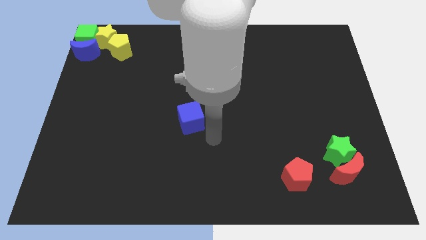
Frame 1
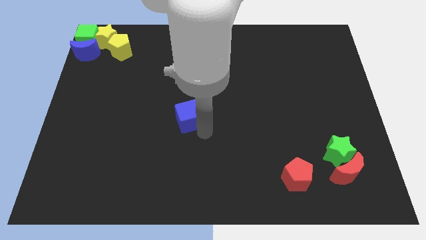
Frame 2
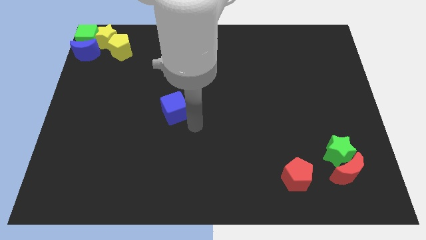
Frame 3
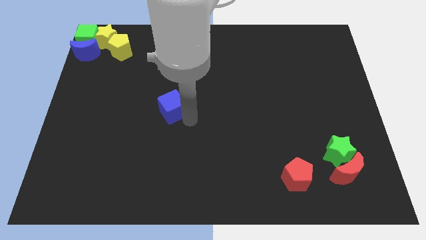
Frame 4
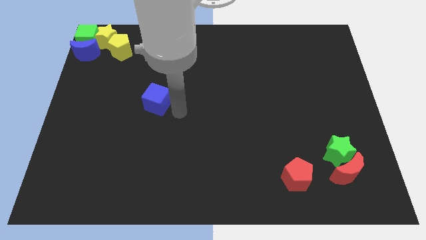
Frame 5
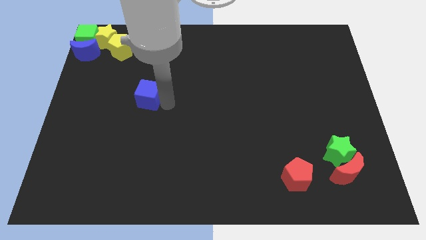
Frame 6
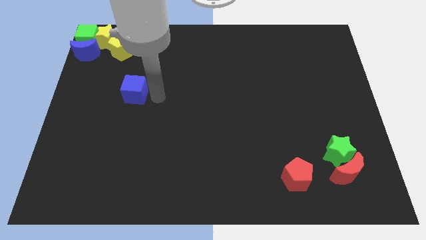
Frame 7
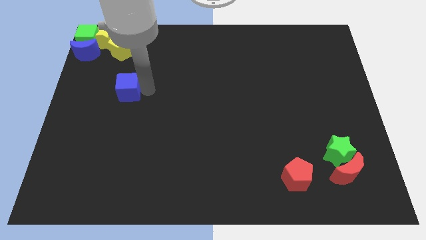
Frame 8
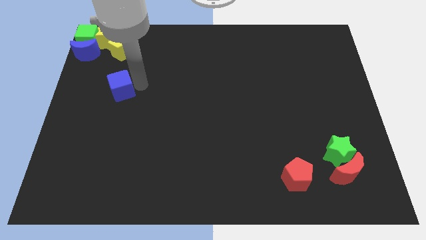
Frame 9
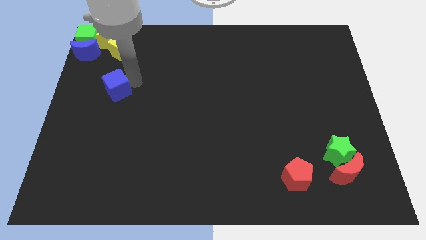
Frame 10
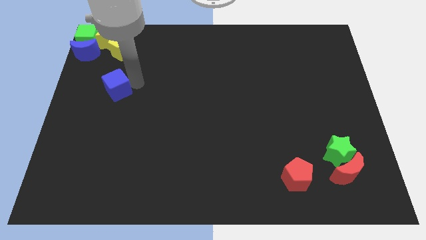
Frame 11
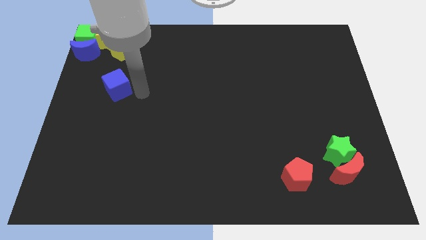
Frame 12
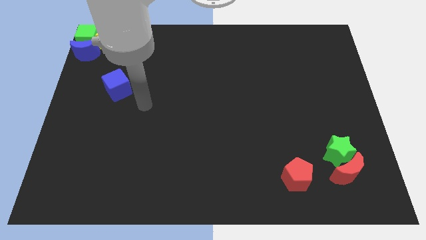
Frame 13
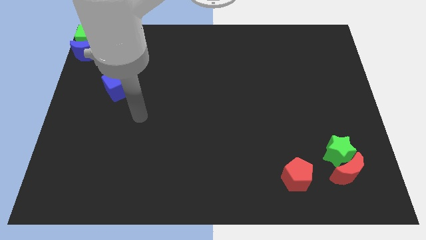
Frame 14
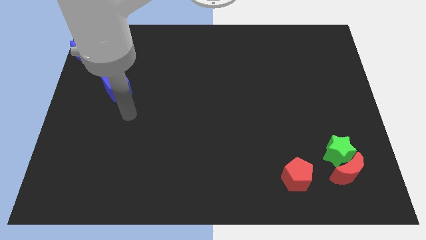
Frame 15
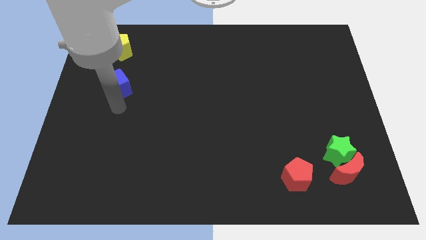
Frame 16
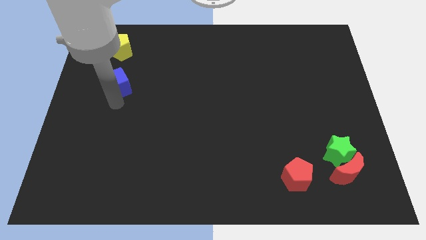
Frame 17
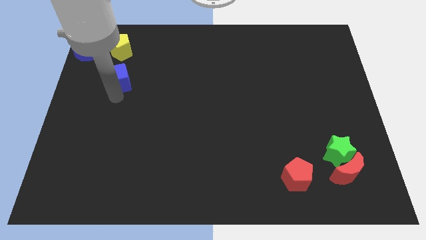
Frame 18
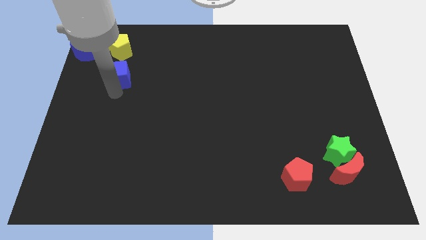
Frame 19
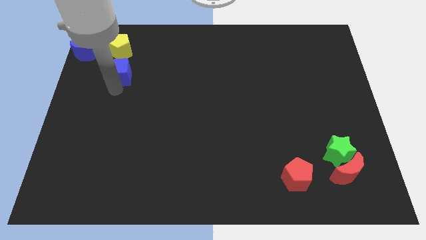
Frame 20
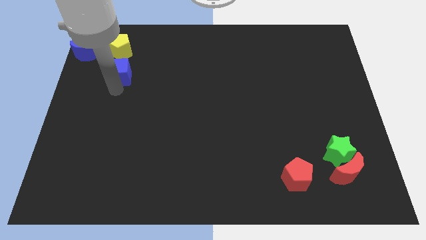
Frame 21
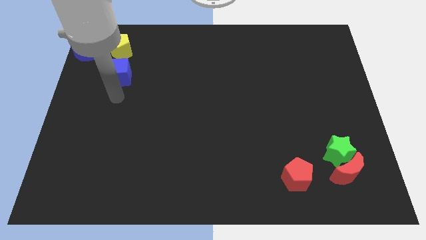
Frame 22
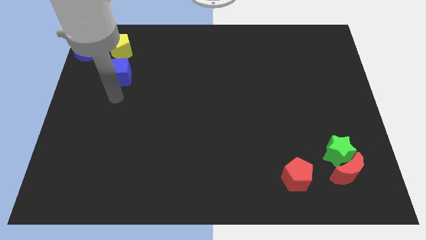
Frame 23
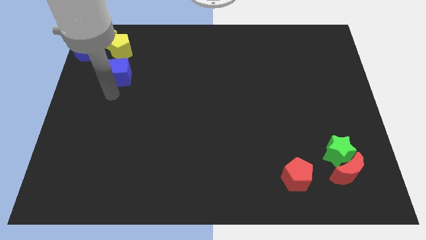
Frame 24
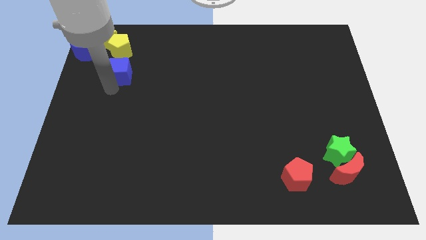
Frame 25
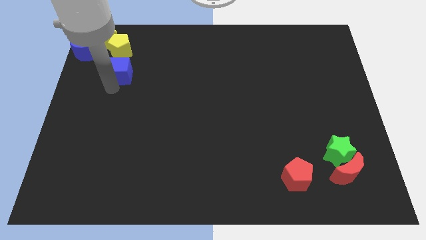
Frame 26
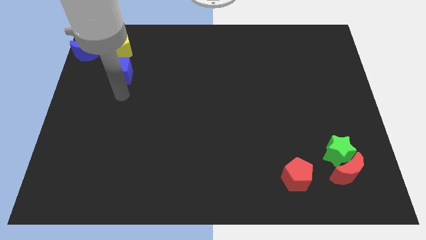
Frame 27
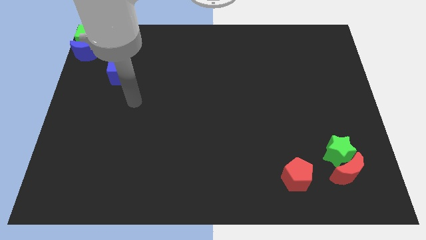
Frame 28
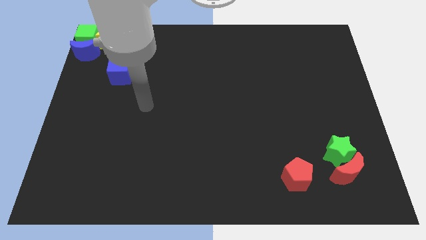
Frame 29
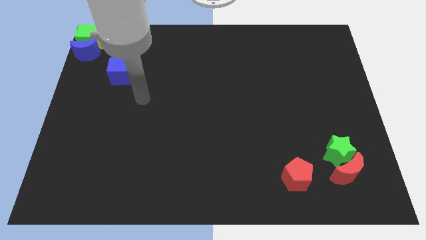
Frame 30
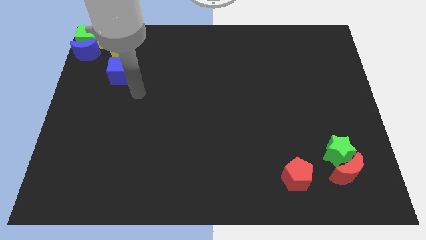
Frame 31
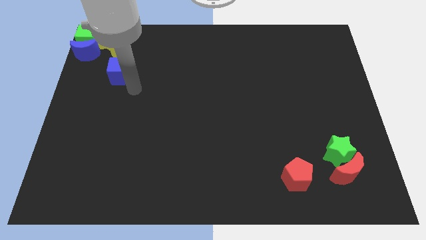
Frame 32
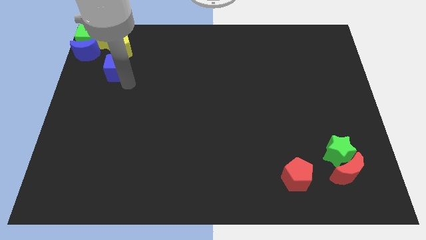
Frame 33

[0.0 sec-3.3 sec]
arrange the blue cube at the bottom of the yellow pentagon vertically

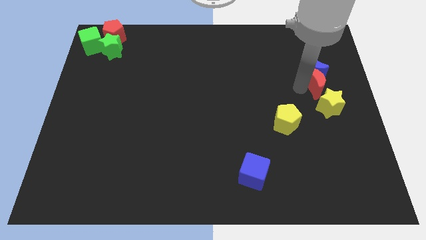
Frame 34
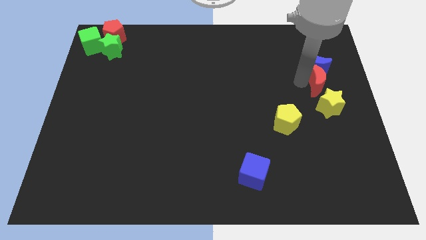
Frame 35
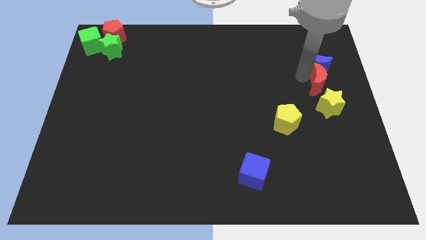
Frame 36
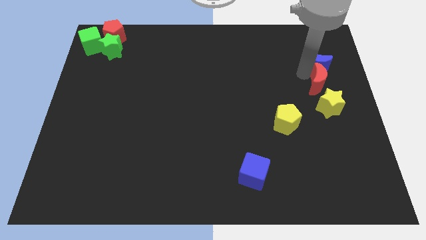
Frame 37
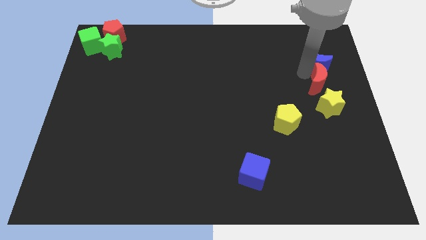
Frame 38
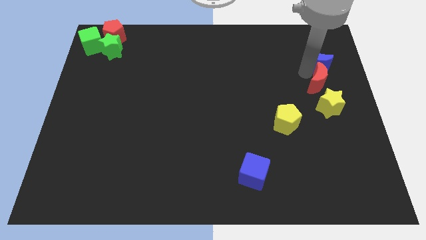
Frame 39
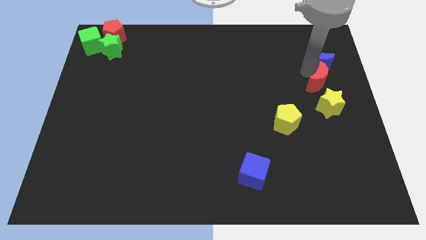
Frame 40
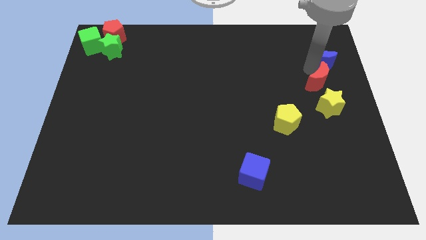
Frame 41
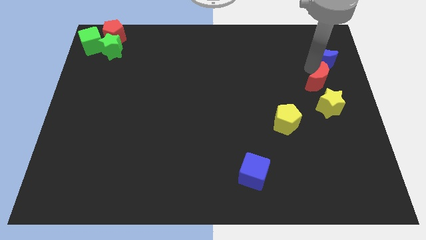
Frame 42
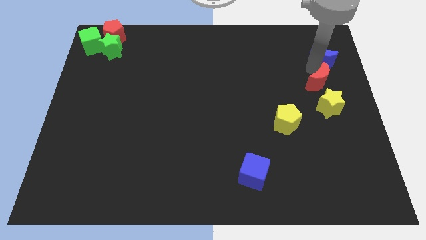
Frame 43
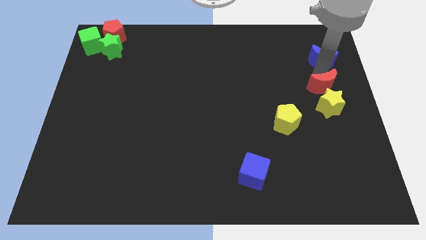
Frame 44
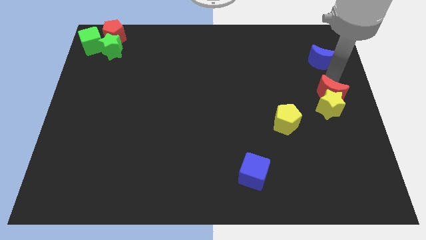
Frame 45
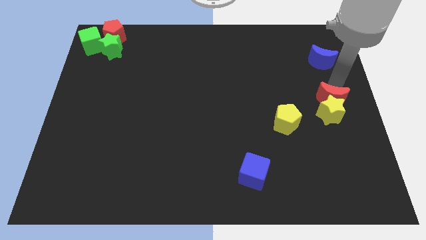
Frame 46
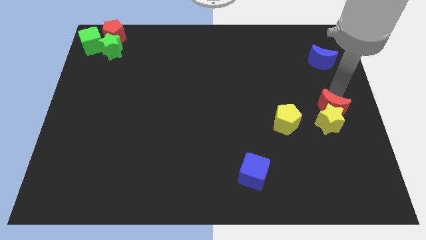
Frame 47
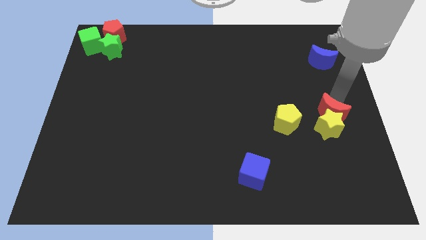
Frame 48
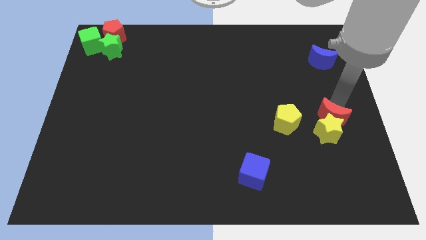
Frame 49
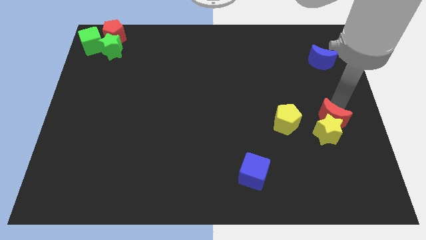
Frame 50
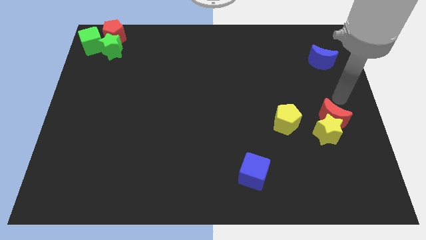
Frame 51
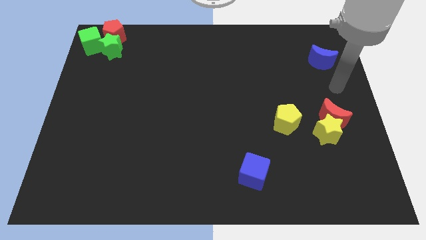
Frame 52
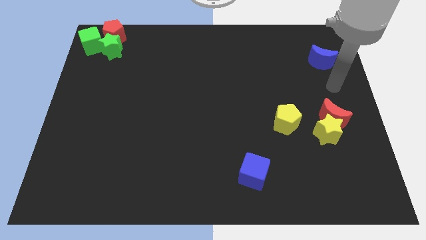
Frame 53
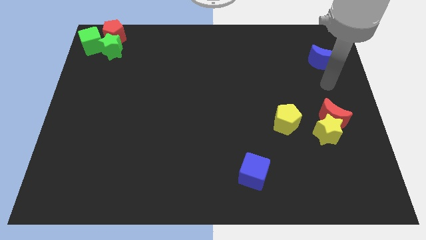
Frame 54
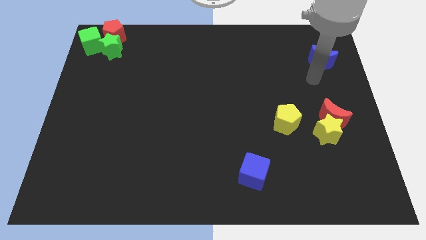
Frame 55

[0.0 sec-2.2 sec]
push red crescent along with yellow star

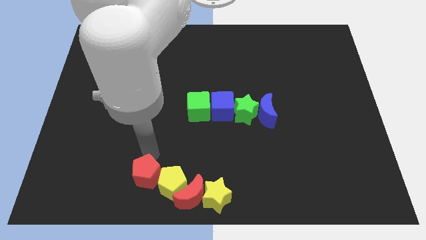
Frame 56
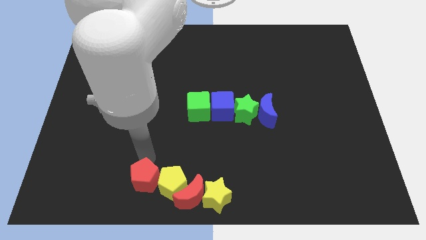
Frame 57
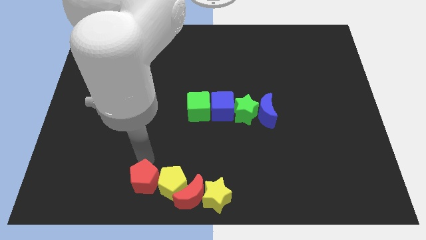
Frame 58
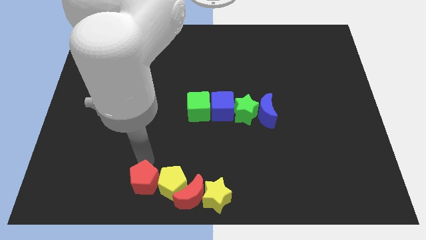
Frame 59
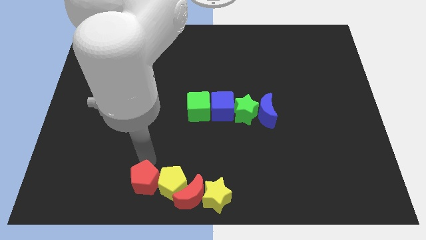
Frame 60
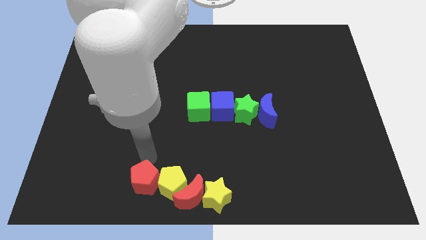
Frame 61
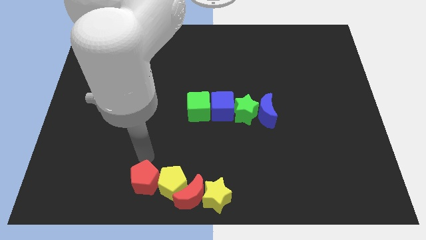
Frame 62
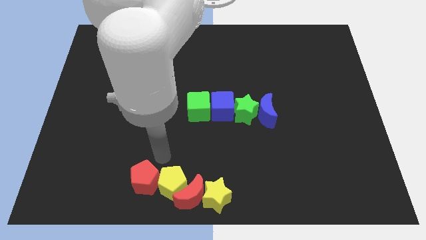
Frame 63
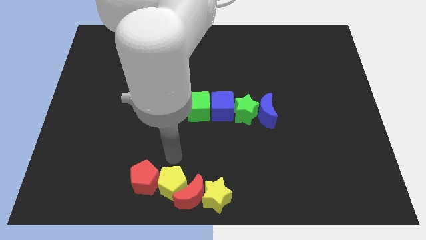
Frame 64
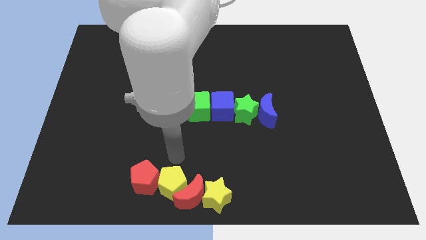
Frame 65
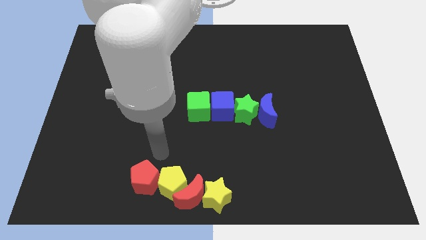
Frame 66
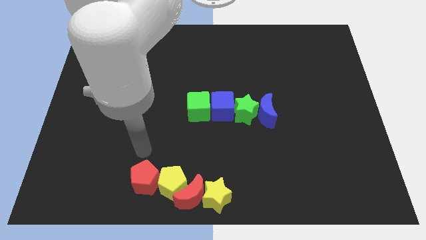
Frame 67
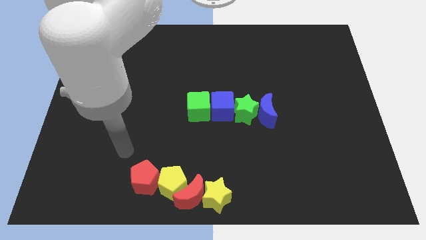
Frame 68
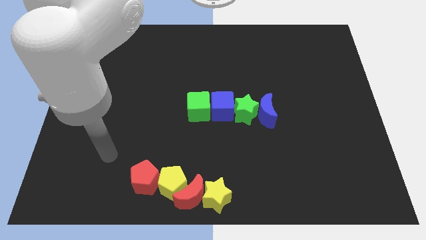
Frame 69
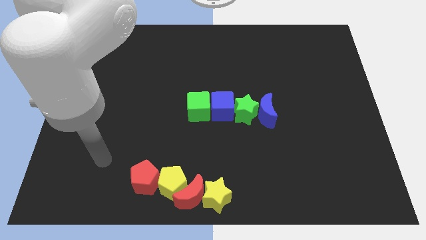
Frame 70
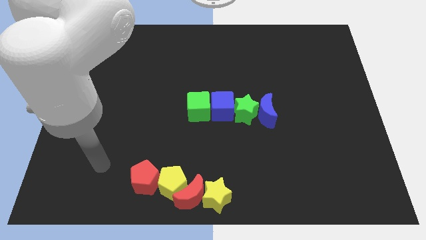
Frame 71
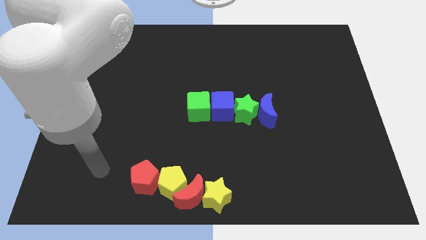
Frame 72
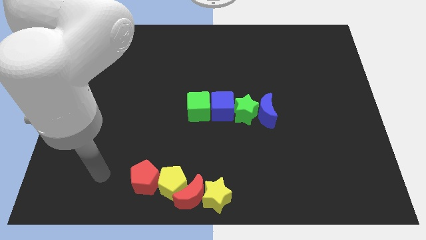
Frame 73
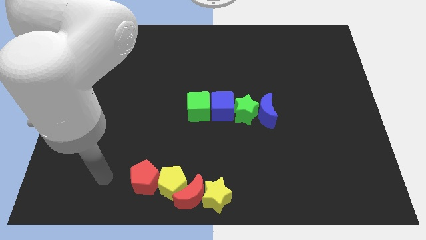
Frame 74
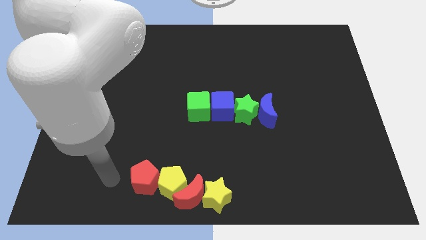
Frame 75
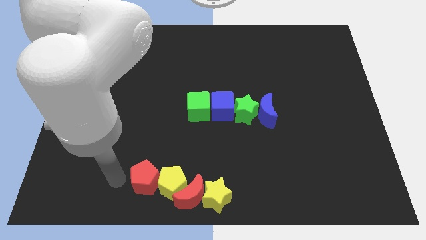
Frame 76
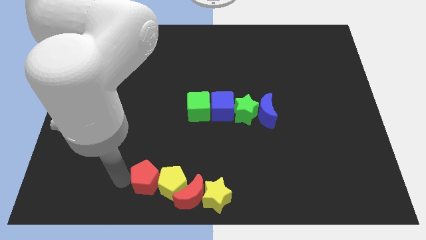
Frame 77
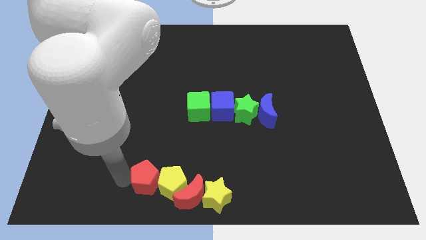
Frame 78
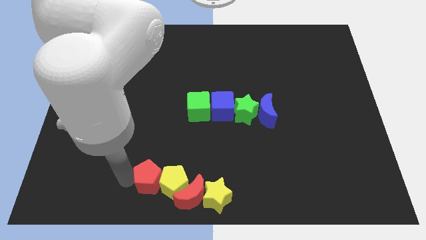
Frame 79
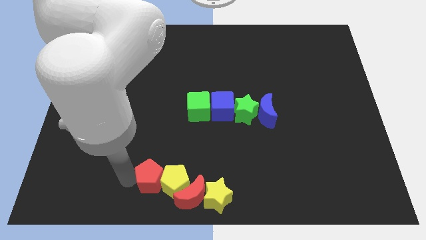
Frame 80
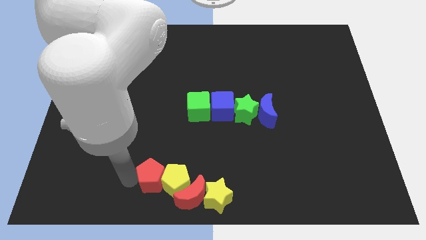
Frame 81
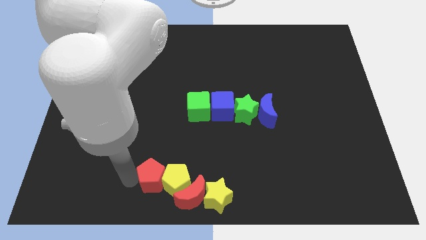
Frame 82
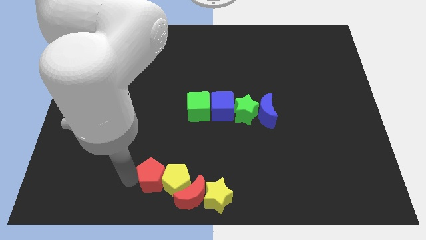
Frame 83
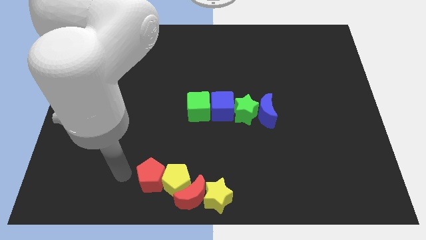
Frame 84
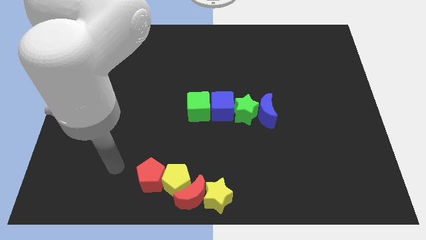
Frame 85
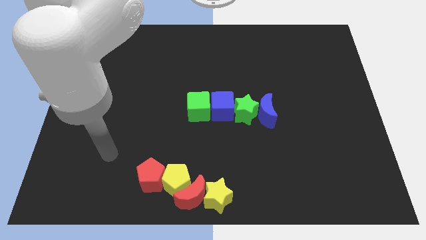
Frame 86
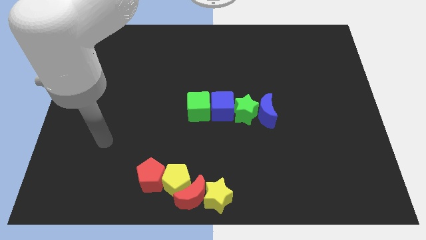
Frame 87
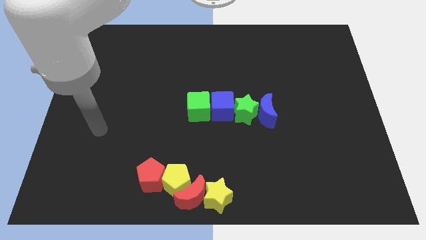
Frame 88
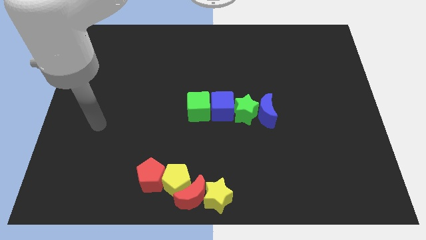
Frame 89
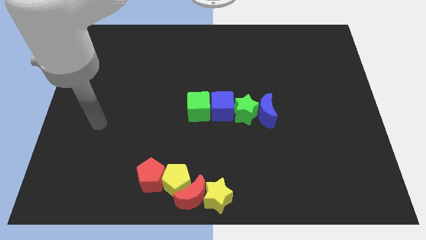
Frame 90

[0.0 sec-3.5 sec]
move the red pentagon into the yellow pentagon
